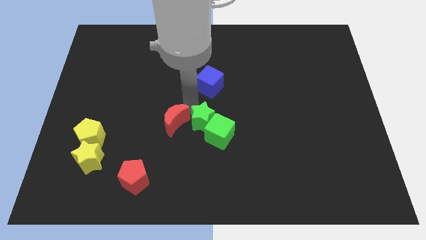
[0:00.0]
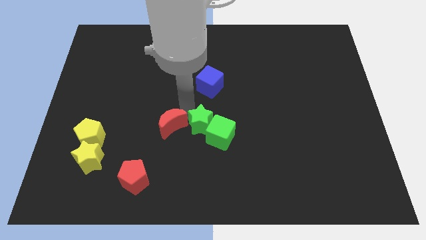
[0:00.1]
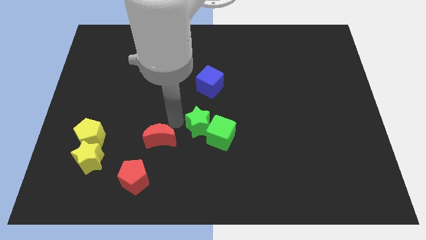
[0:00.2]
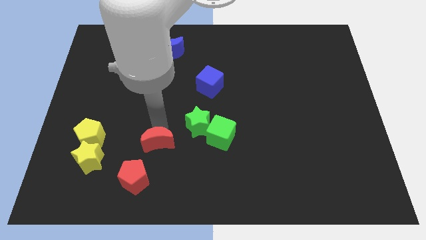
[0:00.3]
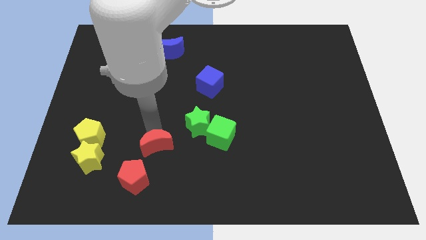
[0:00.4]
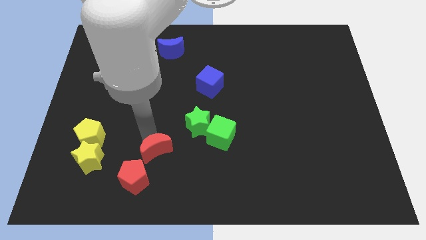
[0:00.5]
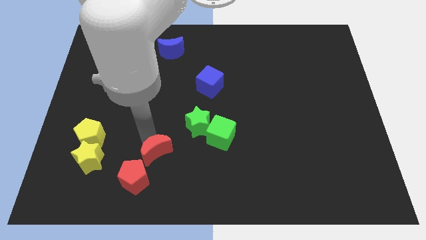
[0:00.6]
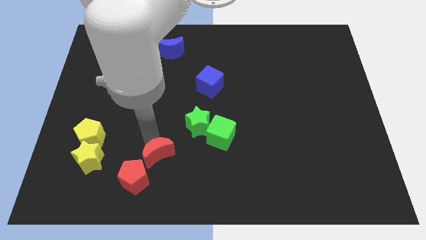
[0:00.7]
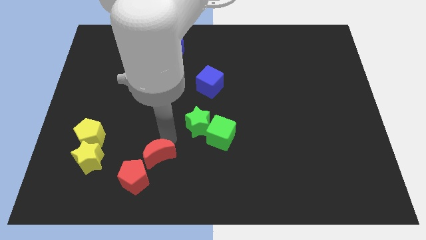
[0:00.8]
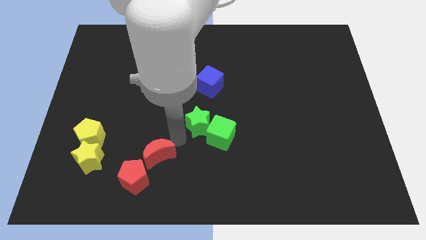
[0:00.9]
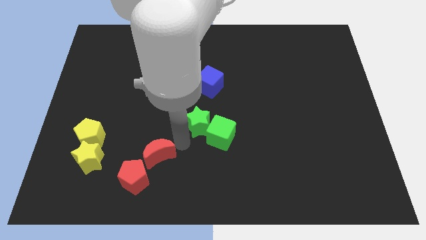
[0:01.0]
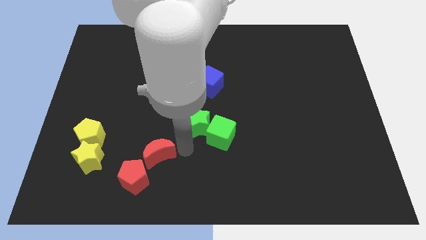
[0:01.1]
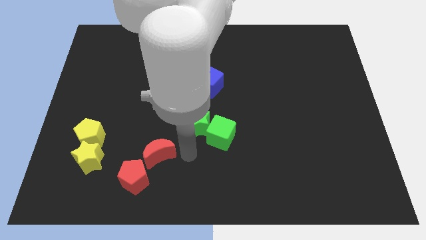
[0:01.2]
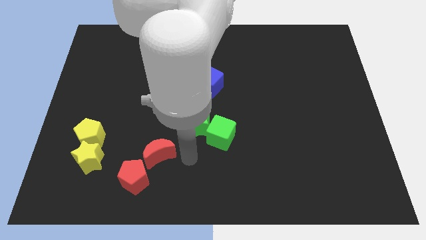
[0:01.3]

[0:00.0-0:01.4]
slide the red crescent away from the green star

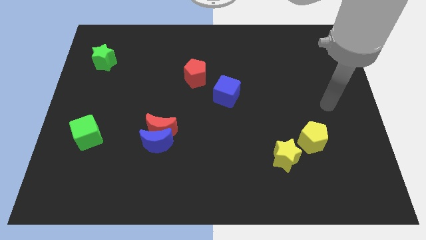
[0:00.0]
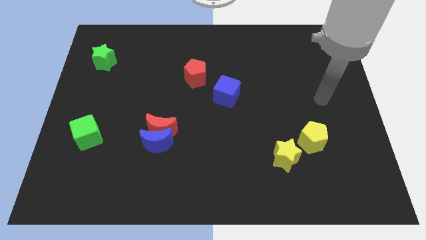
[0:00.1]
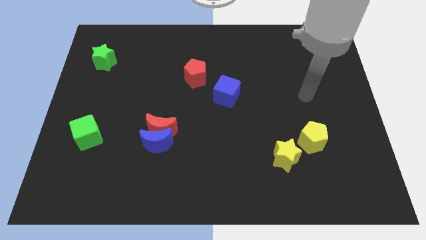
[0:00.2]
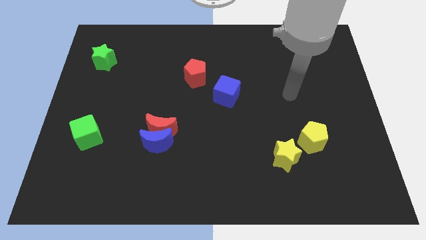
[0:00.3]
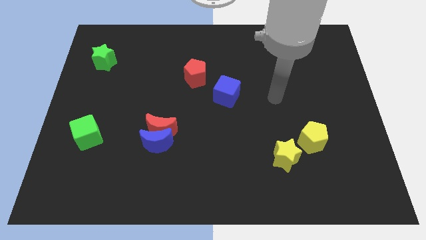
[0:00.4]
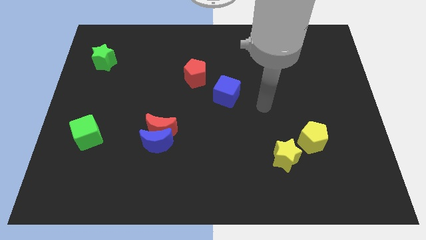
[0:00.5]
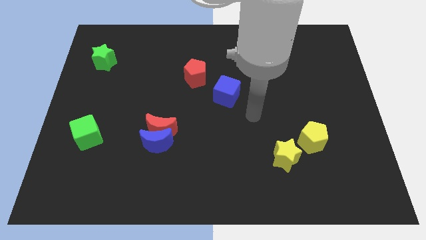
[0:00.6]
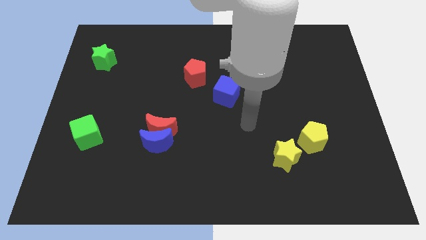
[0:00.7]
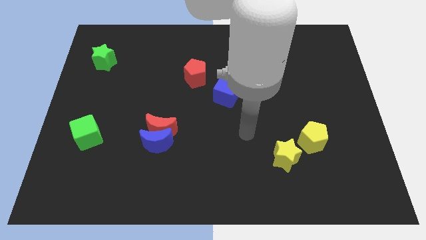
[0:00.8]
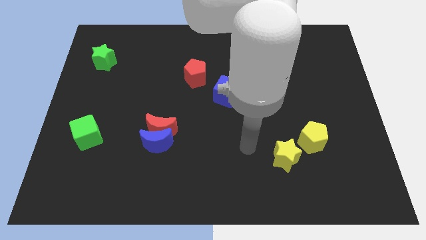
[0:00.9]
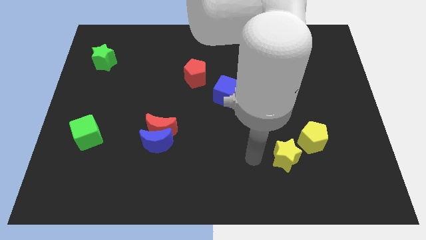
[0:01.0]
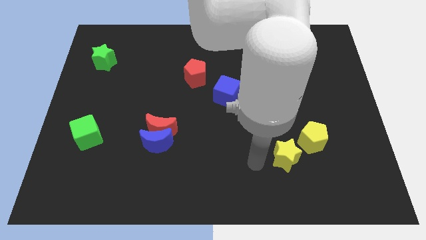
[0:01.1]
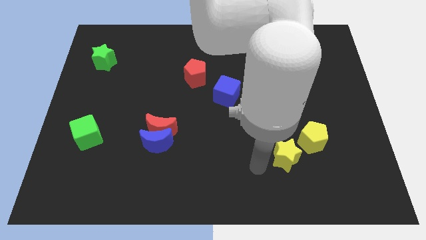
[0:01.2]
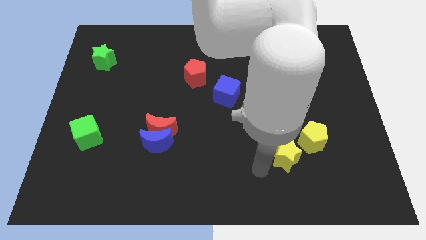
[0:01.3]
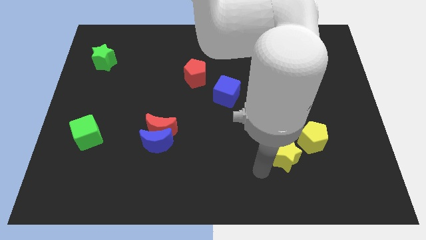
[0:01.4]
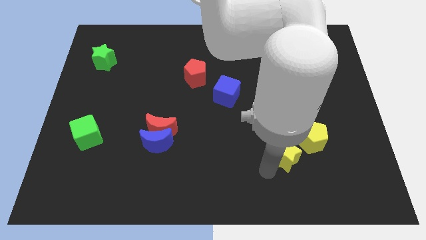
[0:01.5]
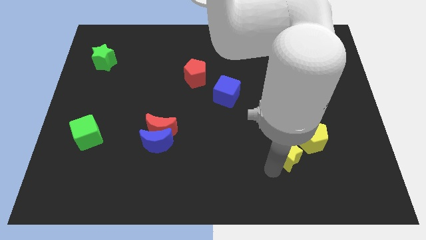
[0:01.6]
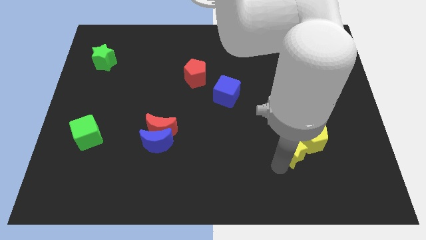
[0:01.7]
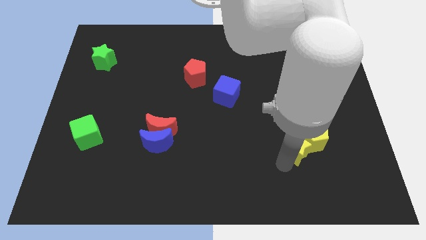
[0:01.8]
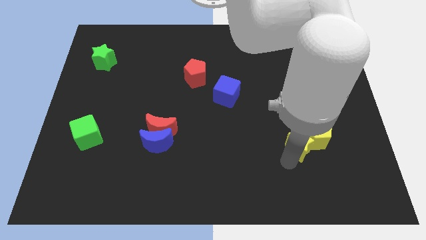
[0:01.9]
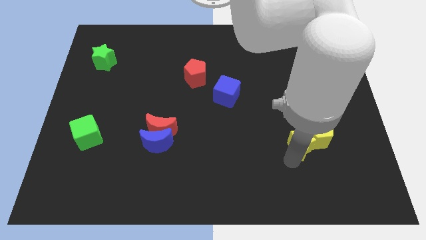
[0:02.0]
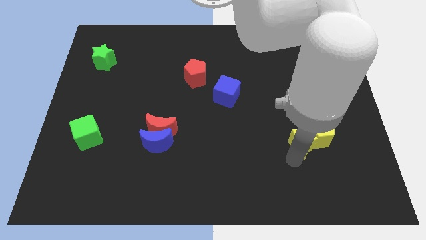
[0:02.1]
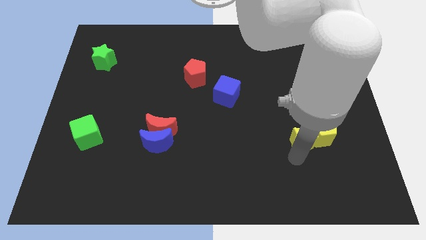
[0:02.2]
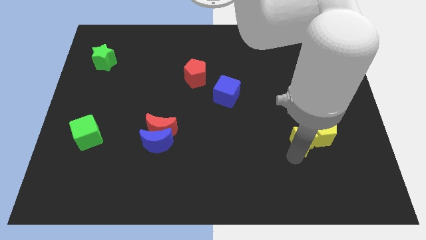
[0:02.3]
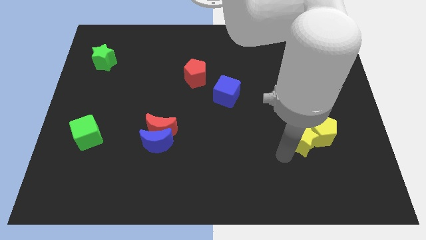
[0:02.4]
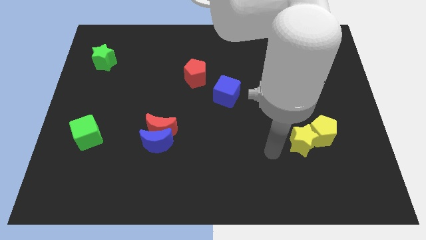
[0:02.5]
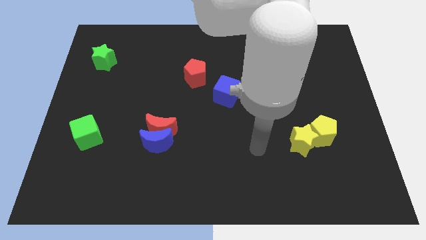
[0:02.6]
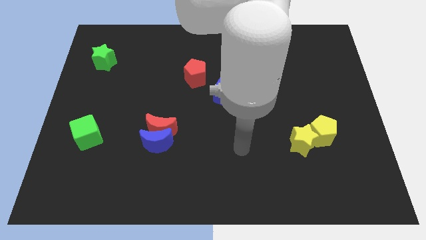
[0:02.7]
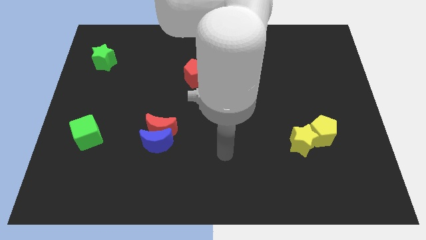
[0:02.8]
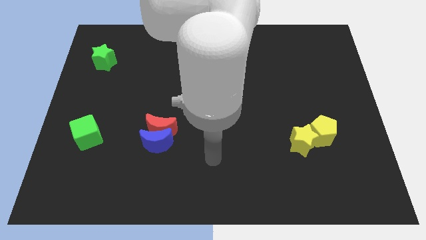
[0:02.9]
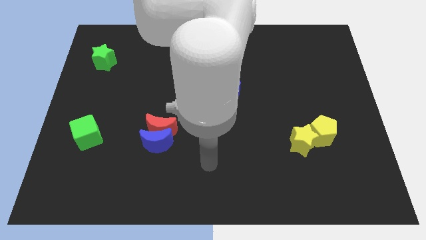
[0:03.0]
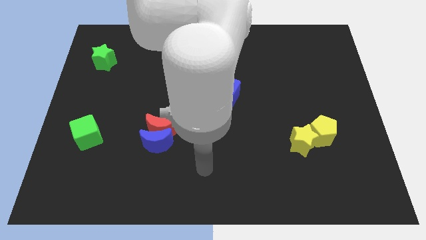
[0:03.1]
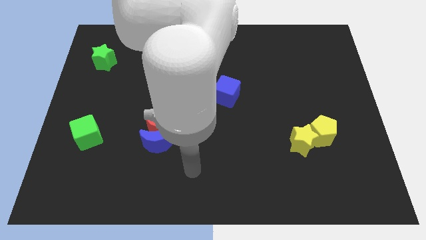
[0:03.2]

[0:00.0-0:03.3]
push the yellow pentagon upwards slightly with the yellow star

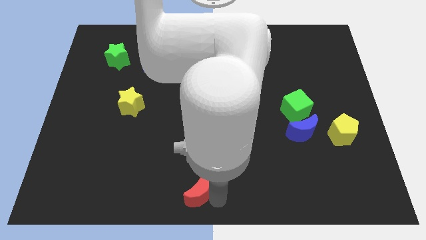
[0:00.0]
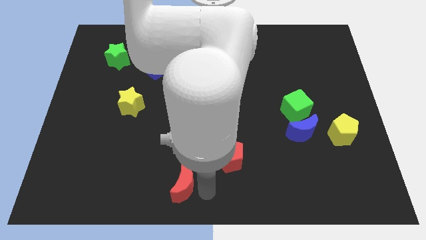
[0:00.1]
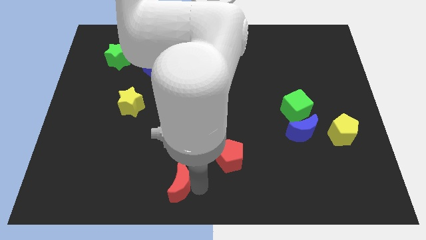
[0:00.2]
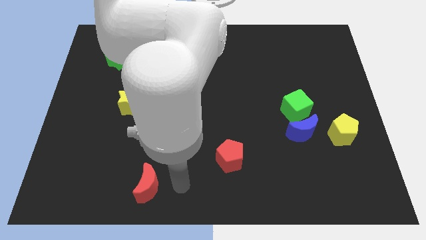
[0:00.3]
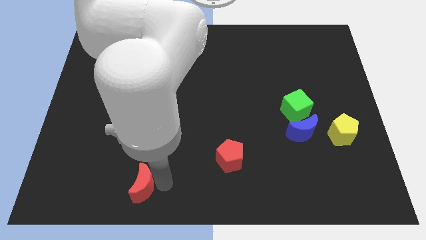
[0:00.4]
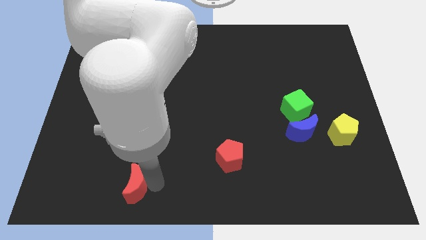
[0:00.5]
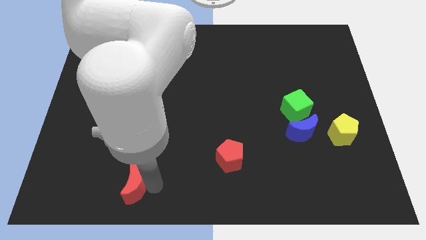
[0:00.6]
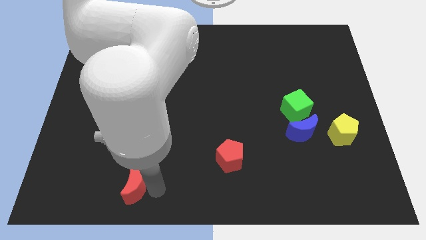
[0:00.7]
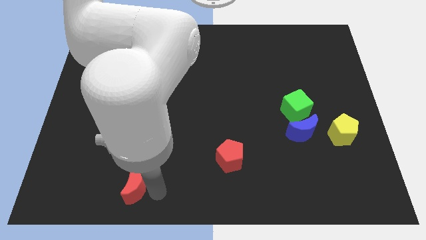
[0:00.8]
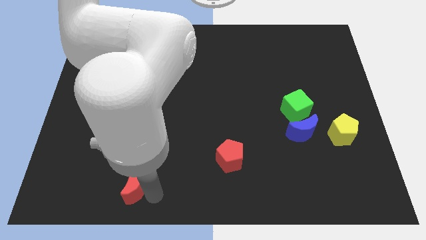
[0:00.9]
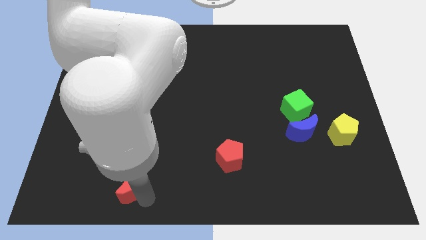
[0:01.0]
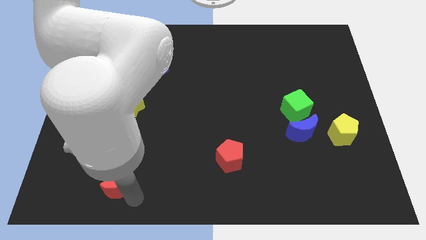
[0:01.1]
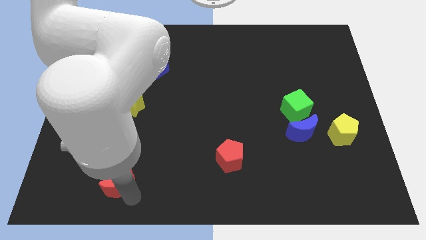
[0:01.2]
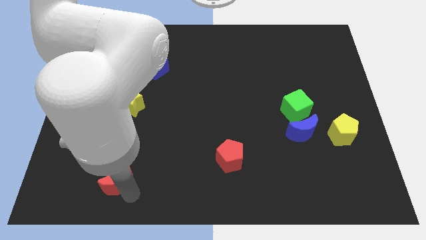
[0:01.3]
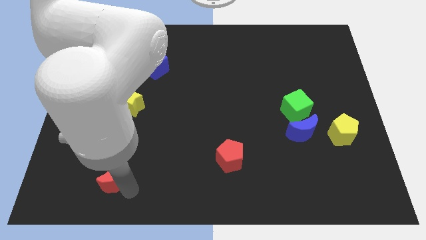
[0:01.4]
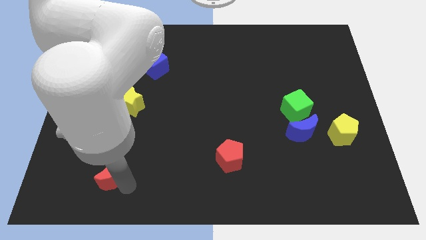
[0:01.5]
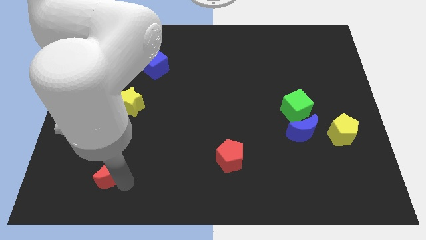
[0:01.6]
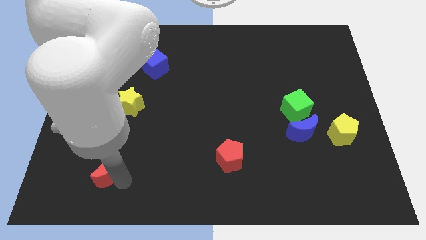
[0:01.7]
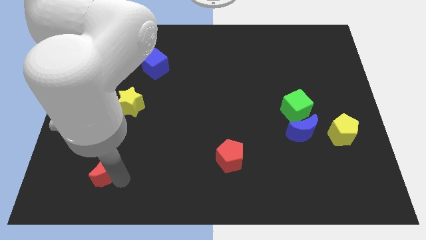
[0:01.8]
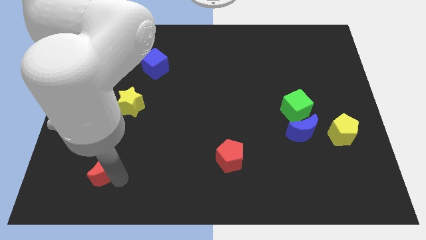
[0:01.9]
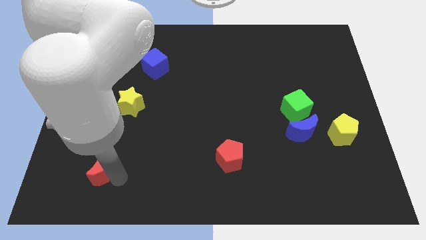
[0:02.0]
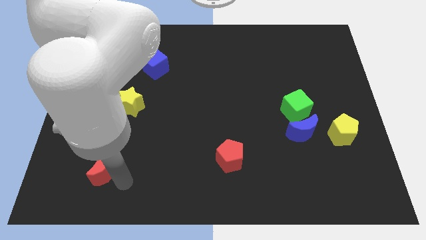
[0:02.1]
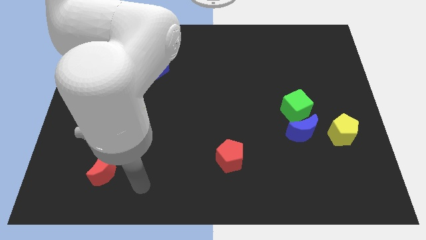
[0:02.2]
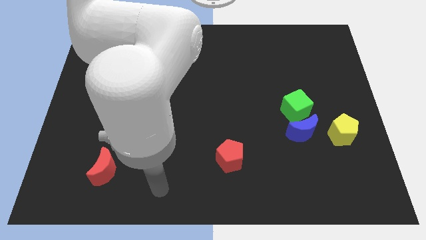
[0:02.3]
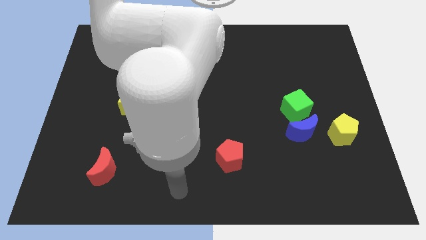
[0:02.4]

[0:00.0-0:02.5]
move the red crescent towards the bottom left

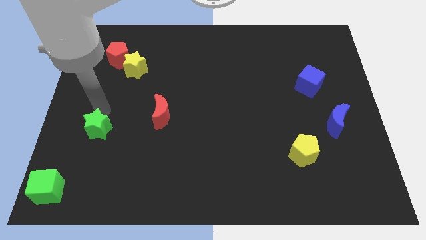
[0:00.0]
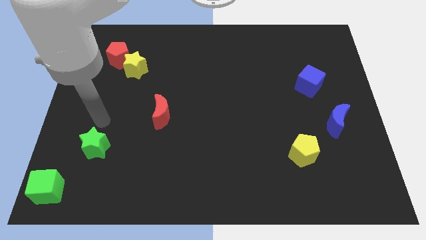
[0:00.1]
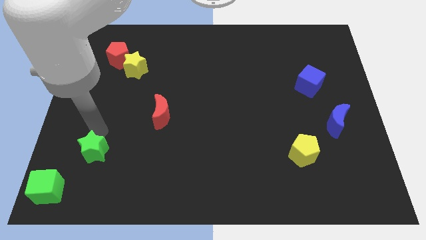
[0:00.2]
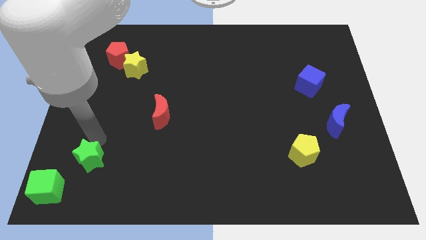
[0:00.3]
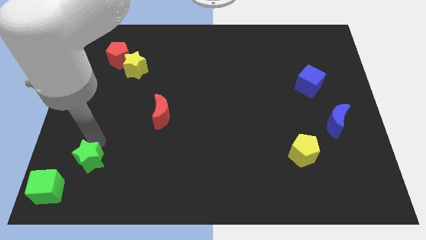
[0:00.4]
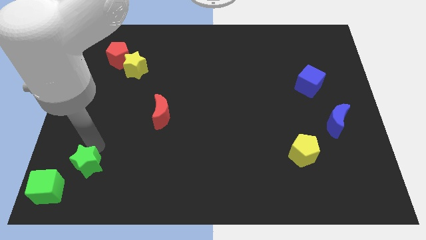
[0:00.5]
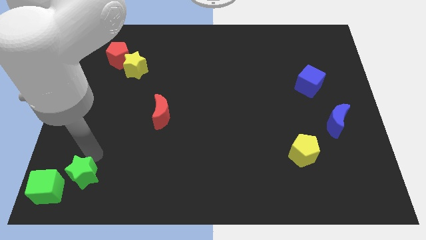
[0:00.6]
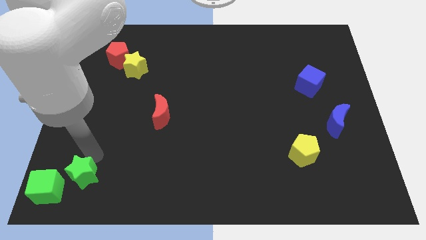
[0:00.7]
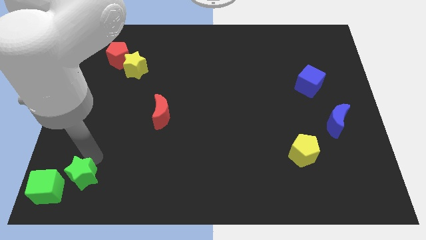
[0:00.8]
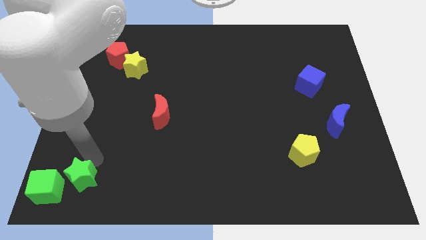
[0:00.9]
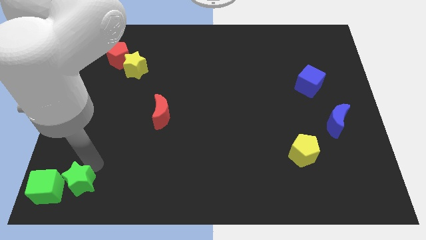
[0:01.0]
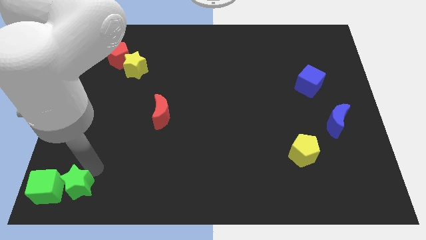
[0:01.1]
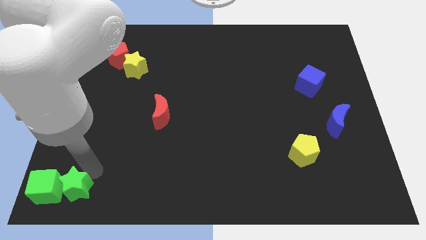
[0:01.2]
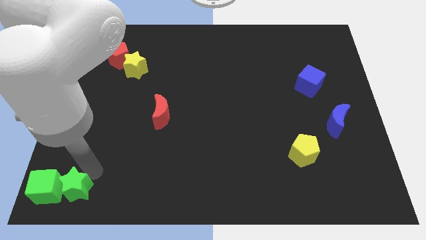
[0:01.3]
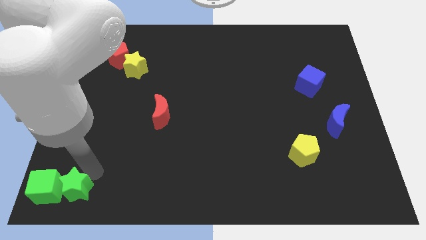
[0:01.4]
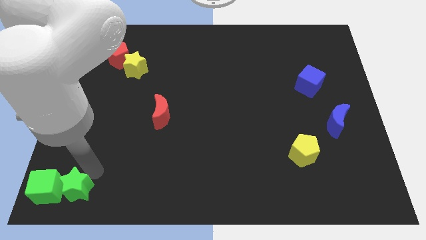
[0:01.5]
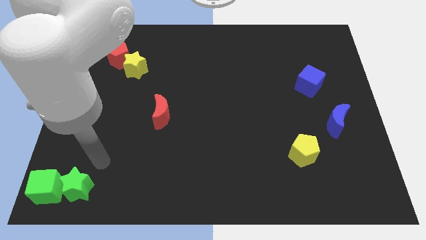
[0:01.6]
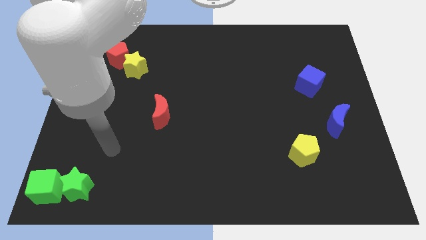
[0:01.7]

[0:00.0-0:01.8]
place the green star close to green cube
